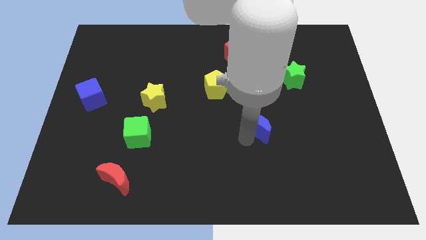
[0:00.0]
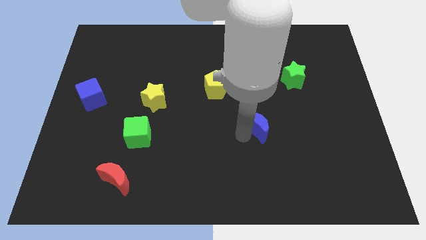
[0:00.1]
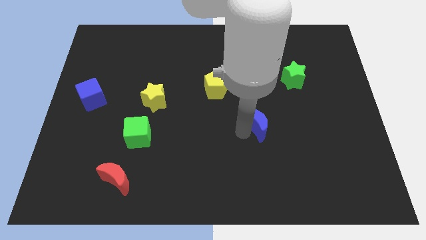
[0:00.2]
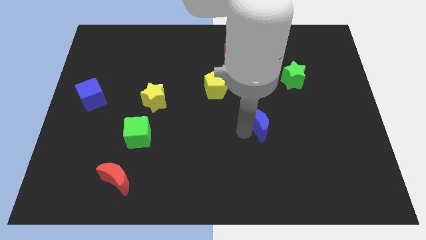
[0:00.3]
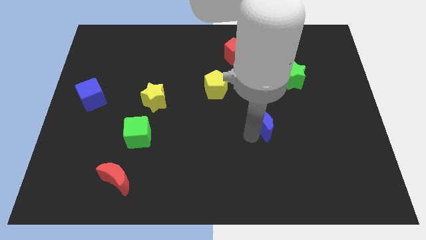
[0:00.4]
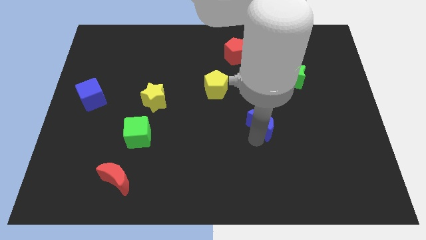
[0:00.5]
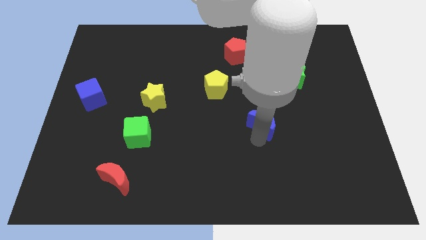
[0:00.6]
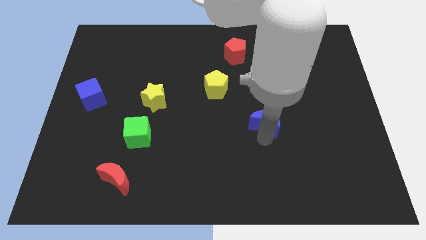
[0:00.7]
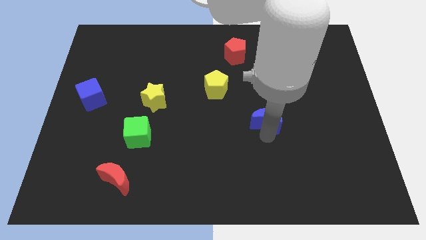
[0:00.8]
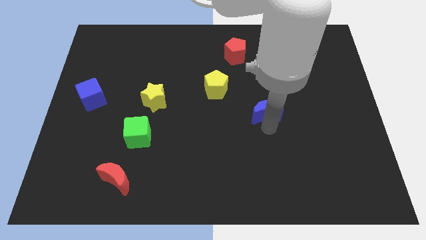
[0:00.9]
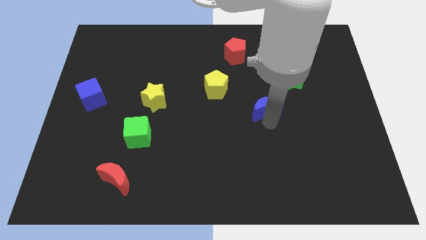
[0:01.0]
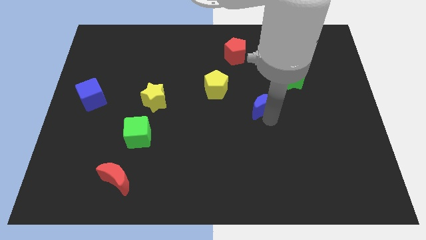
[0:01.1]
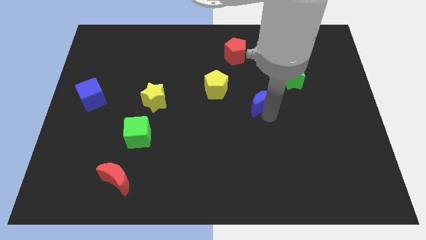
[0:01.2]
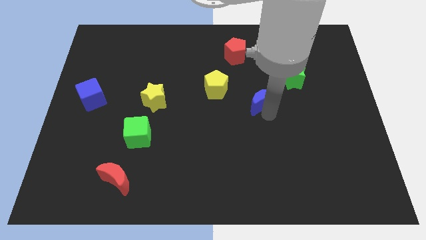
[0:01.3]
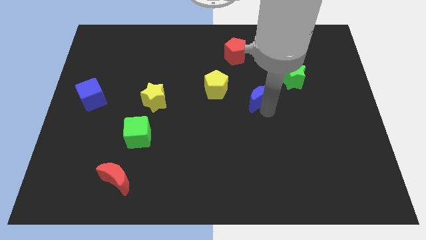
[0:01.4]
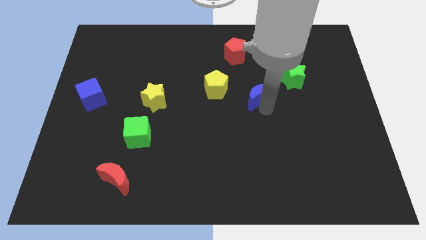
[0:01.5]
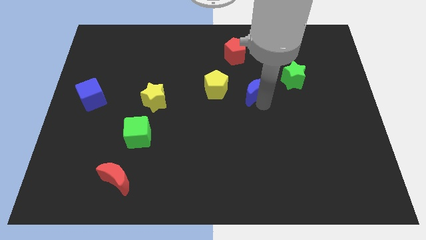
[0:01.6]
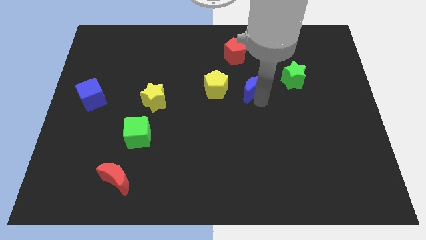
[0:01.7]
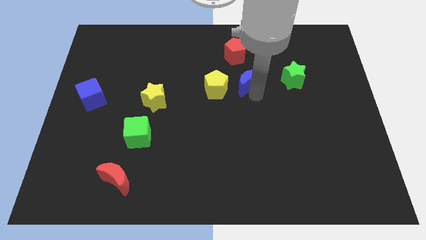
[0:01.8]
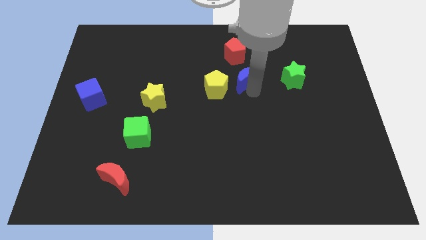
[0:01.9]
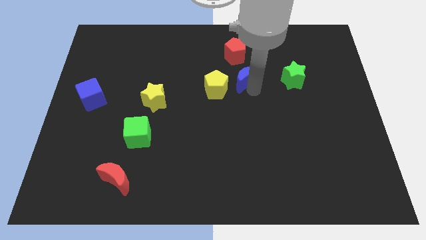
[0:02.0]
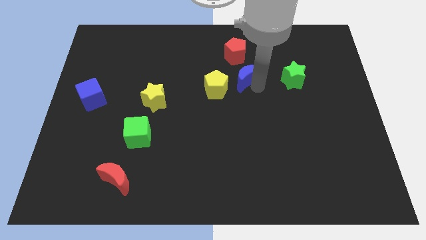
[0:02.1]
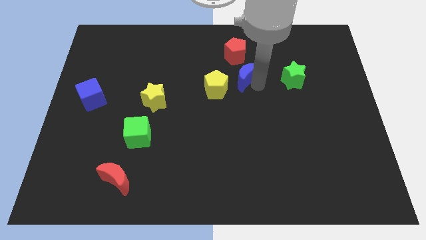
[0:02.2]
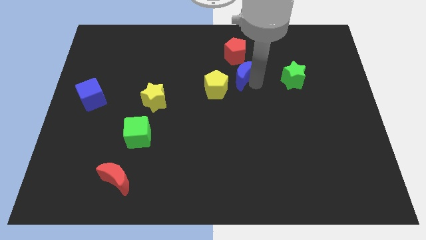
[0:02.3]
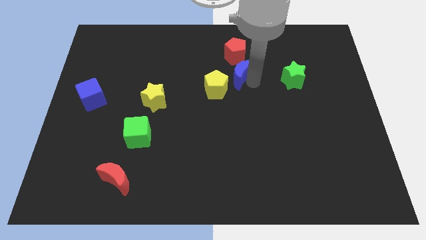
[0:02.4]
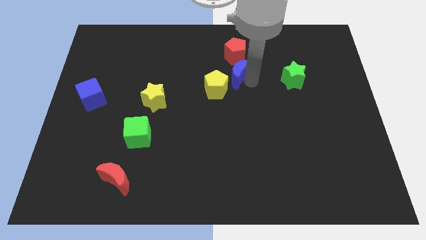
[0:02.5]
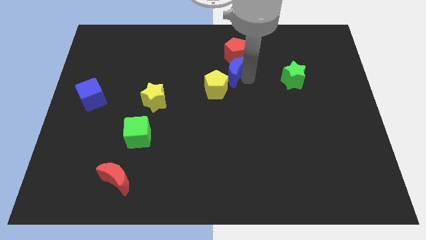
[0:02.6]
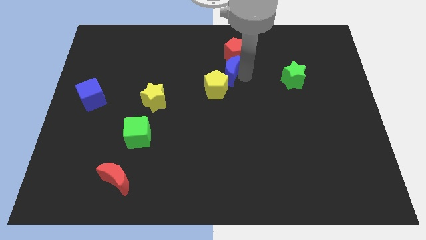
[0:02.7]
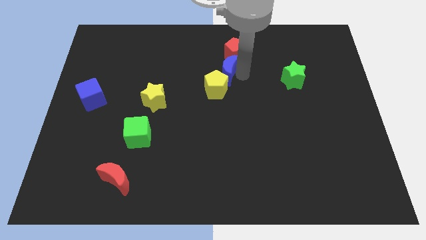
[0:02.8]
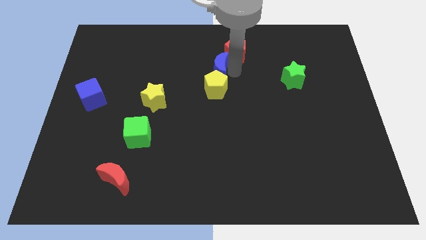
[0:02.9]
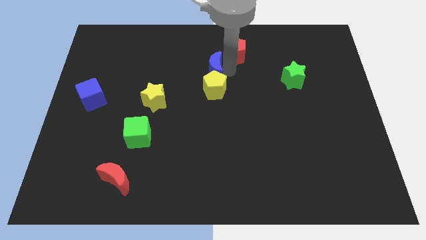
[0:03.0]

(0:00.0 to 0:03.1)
push blue crescent above yellow pentagon

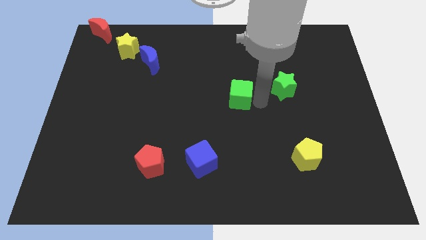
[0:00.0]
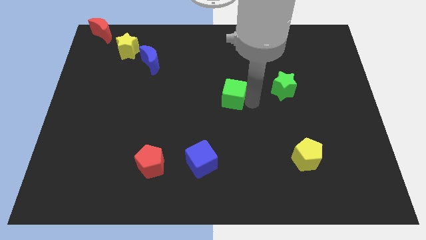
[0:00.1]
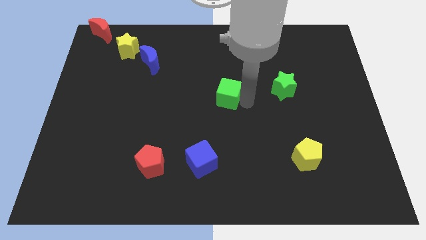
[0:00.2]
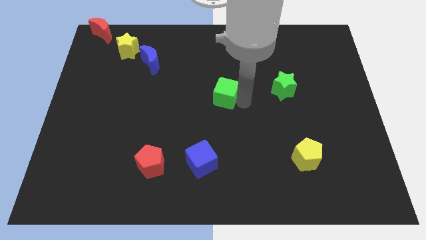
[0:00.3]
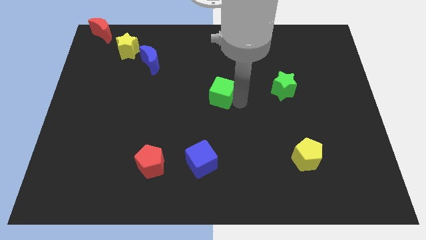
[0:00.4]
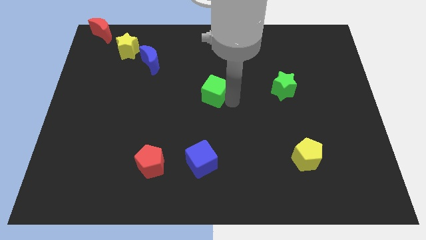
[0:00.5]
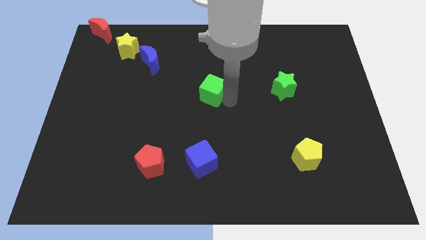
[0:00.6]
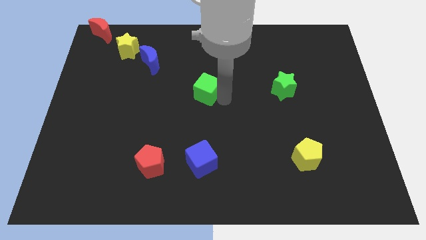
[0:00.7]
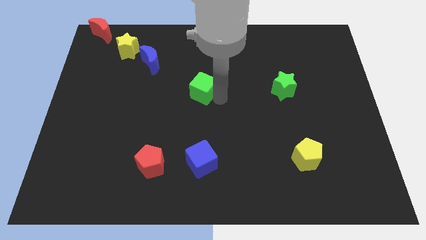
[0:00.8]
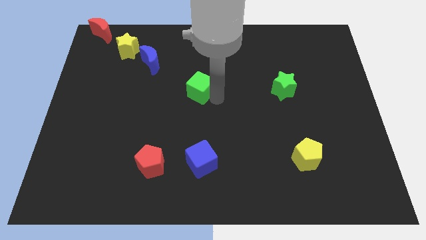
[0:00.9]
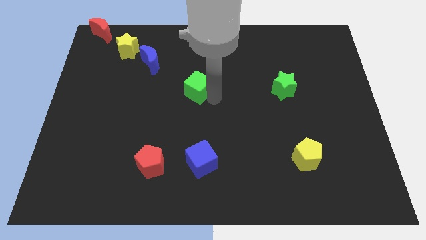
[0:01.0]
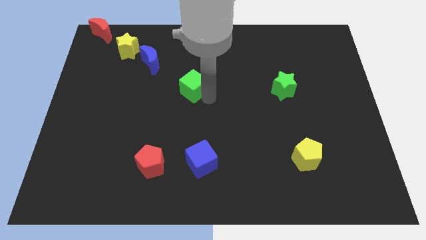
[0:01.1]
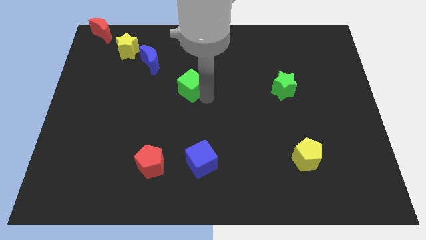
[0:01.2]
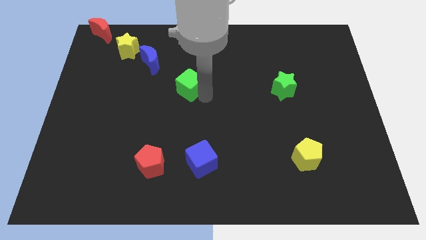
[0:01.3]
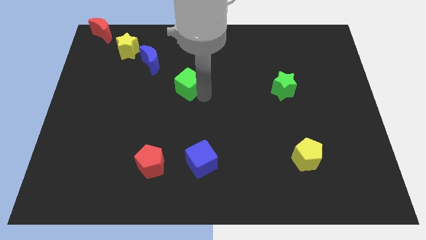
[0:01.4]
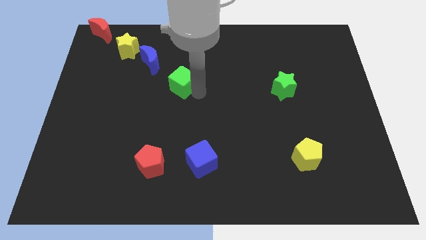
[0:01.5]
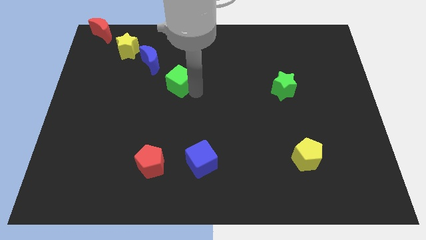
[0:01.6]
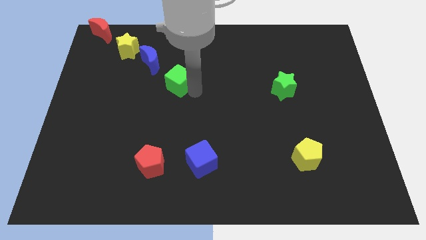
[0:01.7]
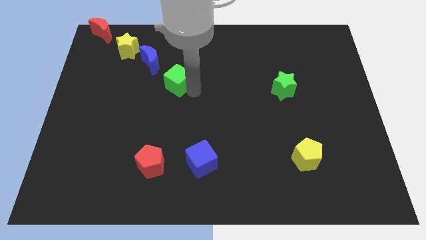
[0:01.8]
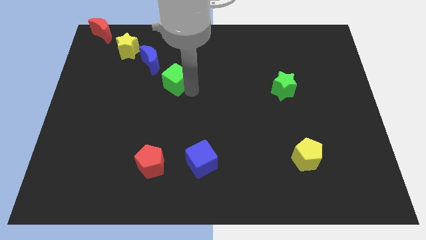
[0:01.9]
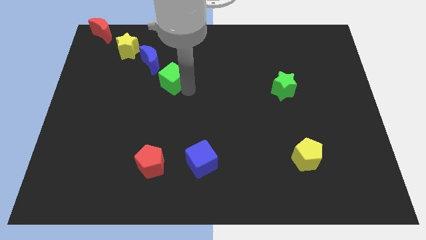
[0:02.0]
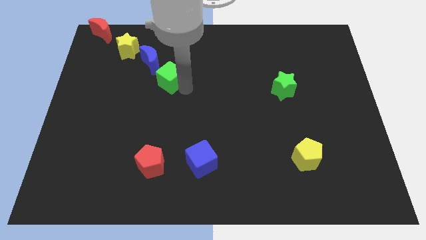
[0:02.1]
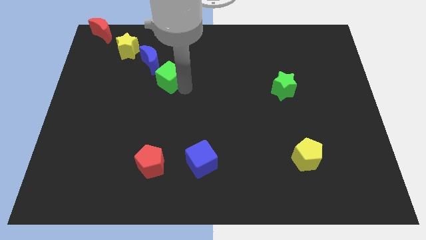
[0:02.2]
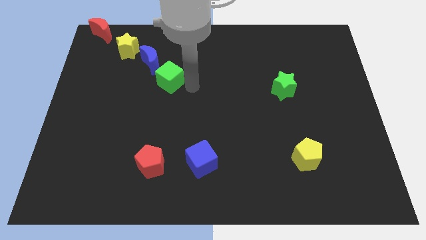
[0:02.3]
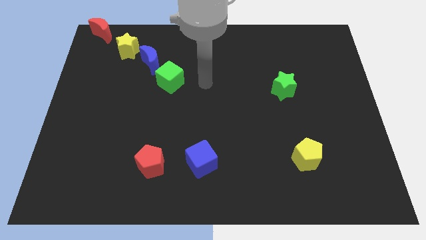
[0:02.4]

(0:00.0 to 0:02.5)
place green cube below blue crescent

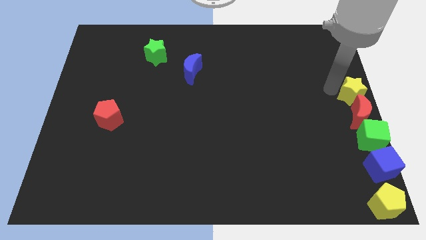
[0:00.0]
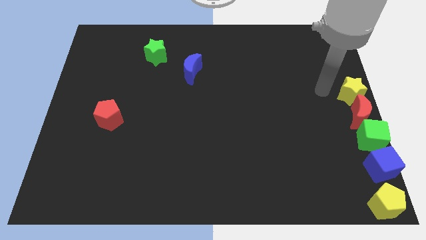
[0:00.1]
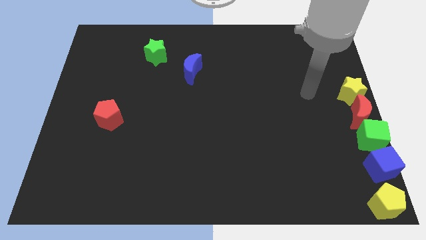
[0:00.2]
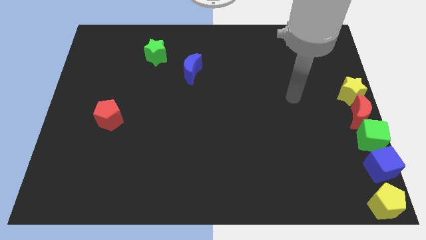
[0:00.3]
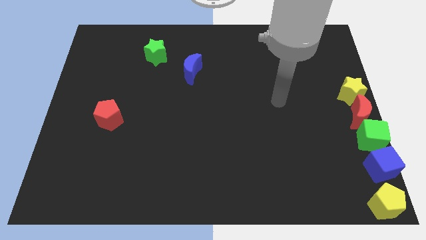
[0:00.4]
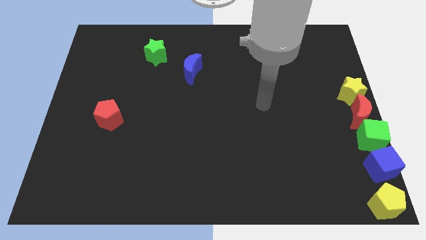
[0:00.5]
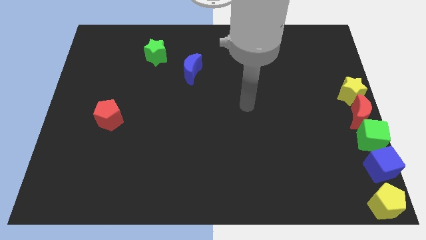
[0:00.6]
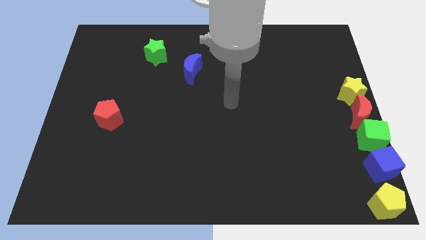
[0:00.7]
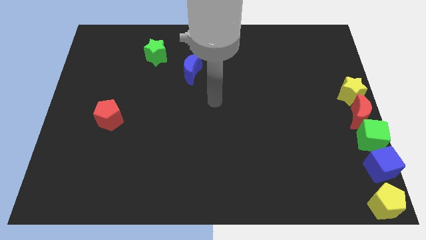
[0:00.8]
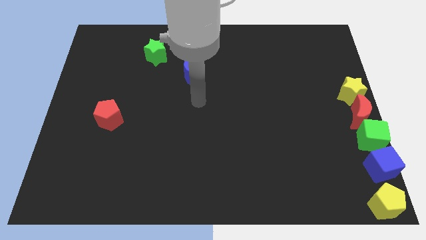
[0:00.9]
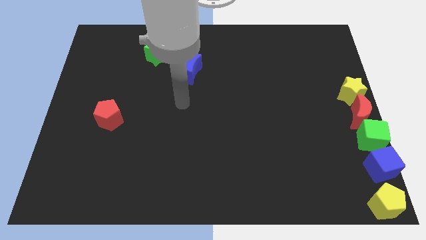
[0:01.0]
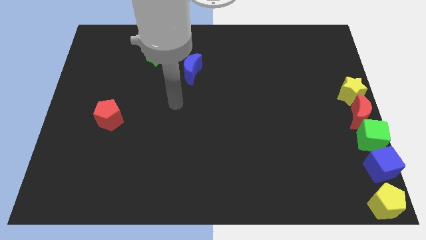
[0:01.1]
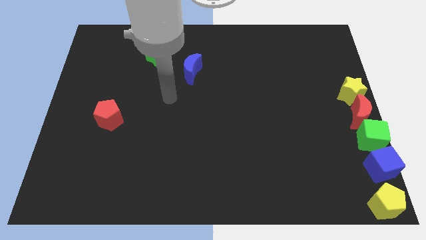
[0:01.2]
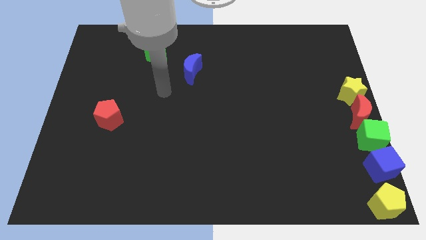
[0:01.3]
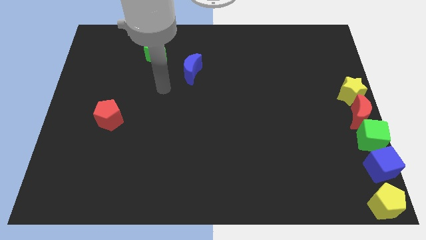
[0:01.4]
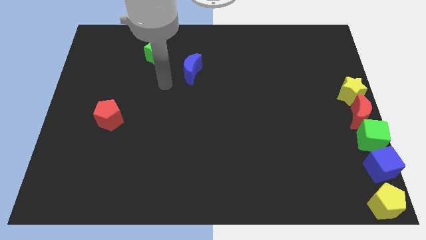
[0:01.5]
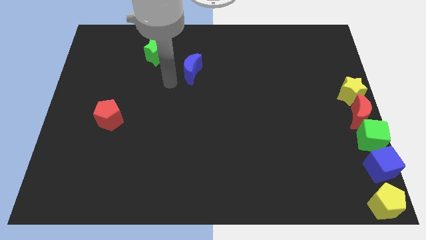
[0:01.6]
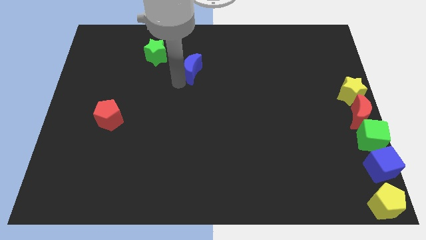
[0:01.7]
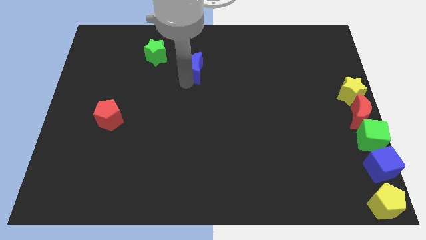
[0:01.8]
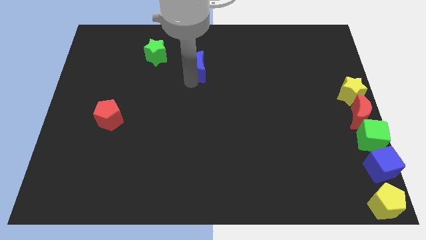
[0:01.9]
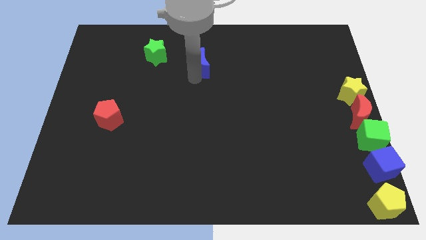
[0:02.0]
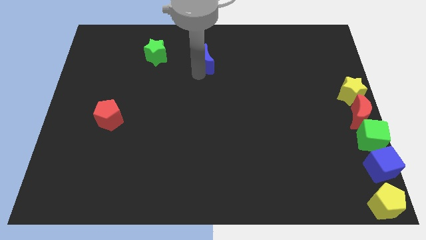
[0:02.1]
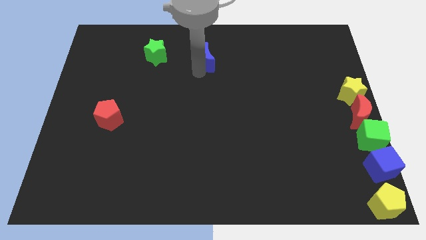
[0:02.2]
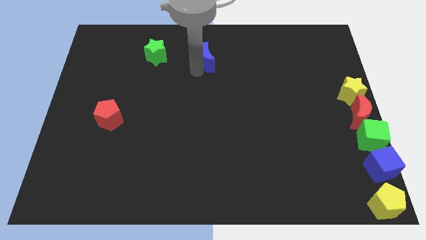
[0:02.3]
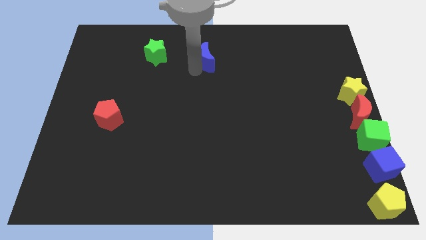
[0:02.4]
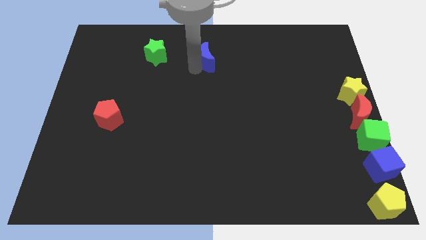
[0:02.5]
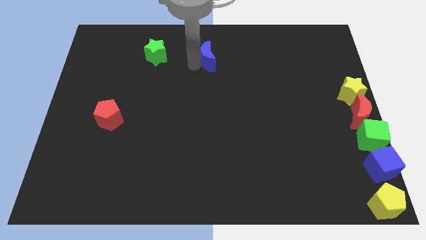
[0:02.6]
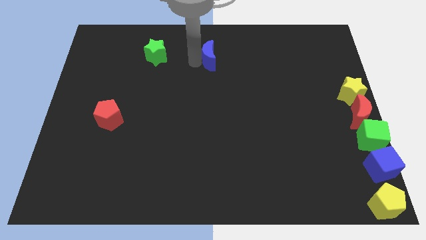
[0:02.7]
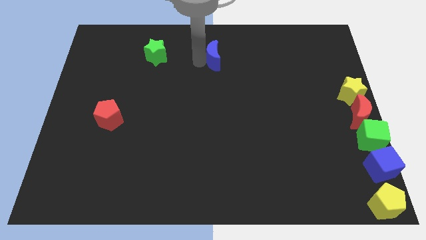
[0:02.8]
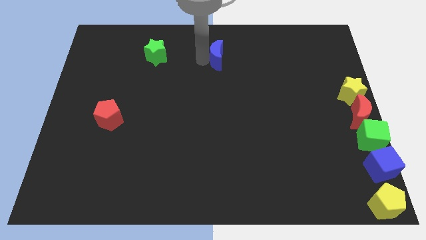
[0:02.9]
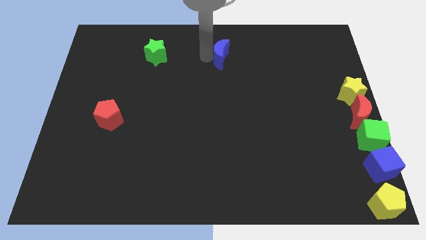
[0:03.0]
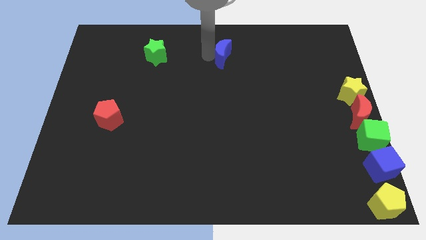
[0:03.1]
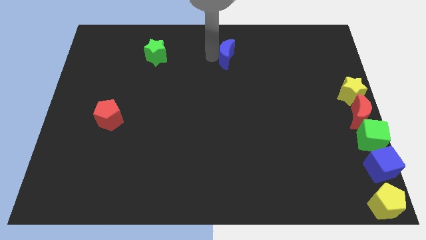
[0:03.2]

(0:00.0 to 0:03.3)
put the blue crescent horizontally to the right of the green star

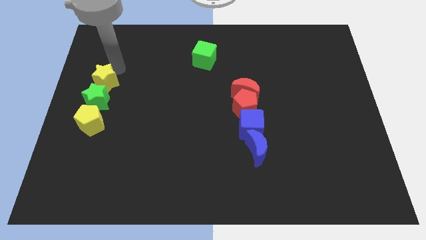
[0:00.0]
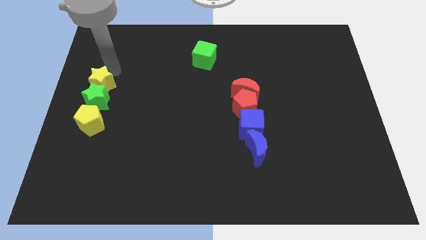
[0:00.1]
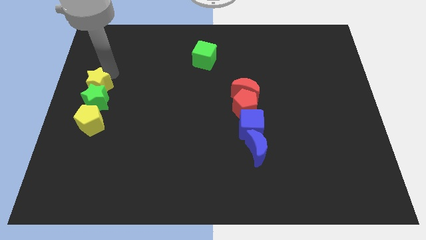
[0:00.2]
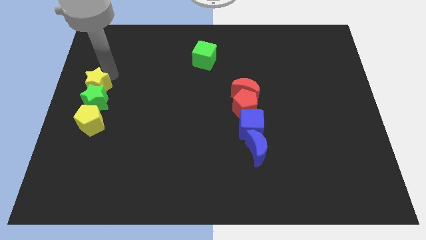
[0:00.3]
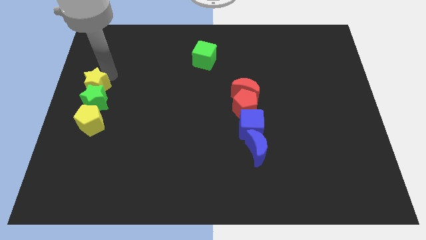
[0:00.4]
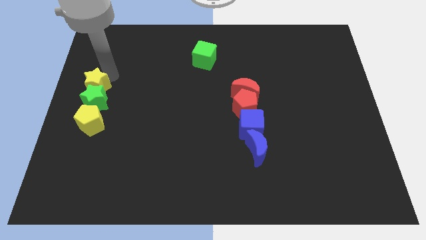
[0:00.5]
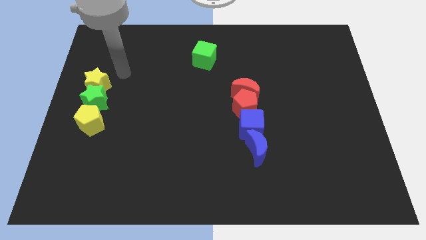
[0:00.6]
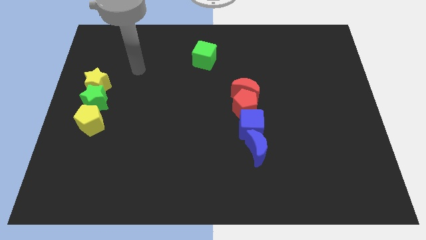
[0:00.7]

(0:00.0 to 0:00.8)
push the yellow star into the green star
